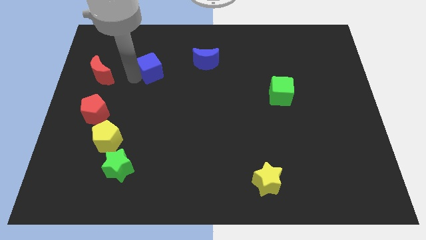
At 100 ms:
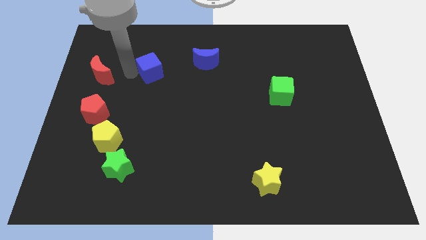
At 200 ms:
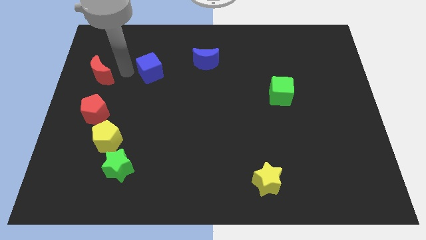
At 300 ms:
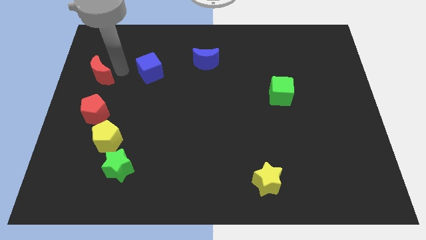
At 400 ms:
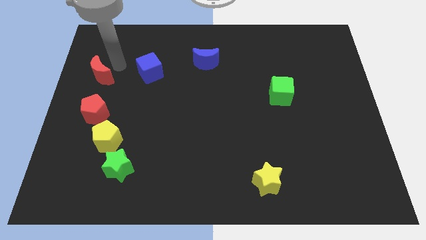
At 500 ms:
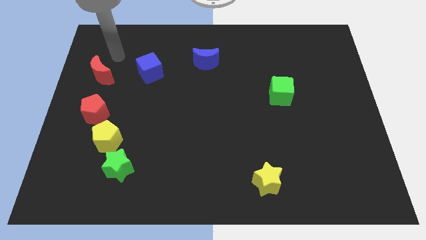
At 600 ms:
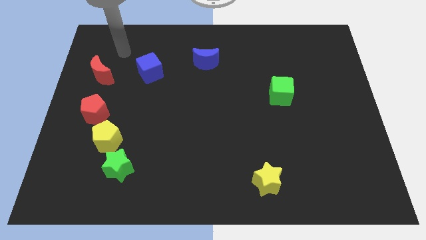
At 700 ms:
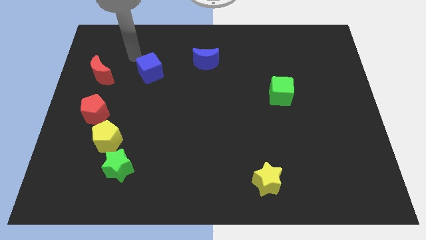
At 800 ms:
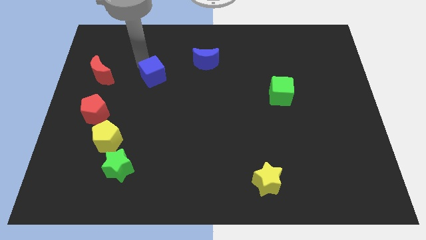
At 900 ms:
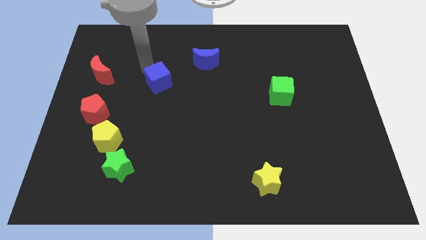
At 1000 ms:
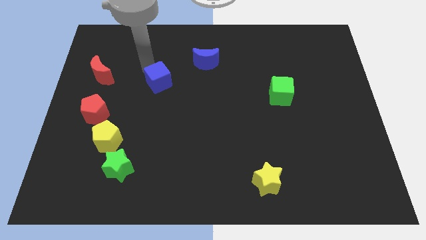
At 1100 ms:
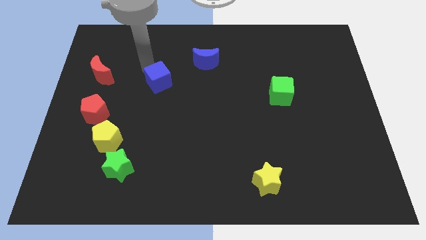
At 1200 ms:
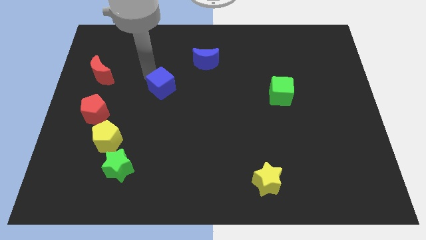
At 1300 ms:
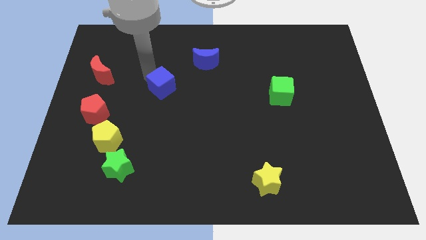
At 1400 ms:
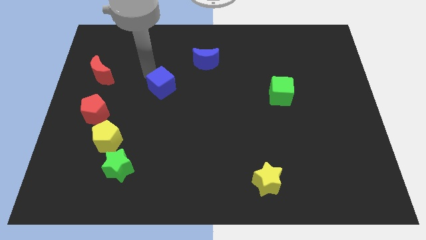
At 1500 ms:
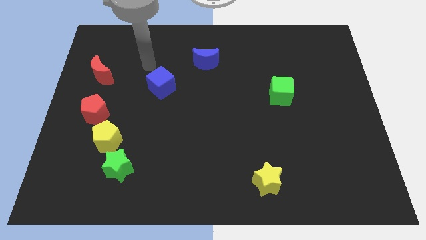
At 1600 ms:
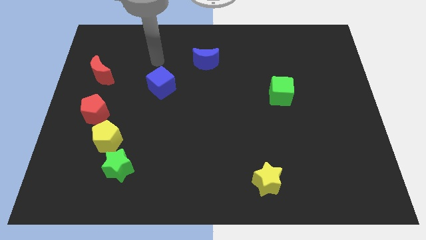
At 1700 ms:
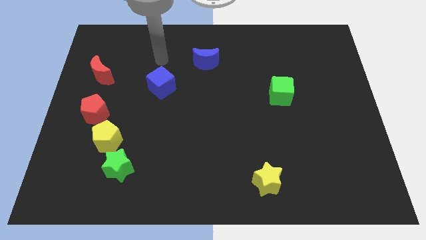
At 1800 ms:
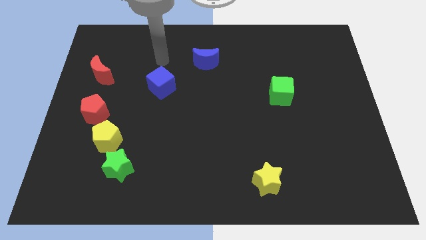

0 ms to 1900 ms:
move the cube slightly down

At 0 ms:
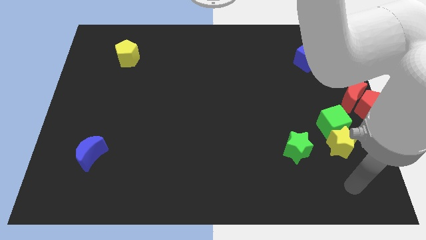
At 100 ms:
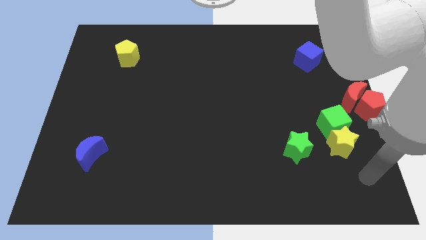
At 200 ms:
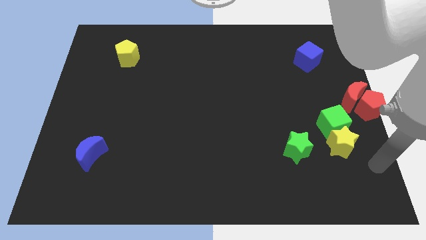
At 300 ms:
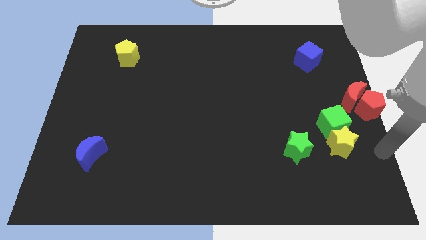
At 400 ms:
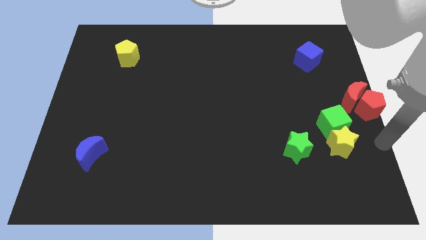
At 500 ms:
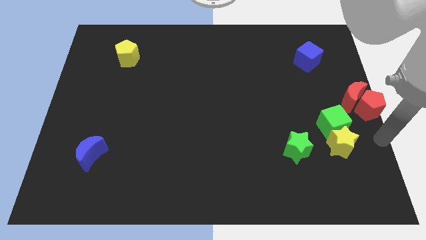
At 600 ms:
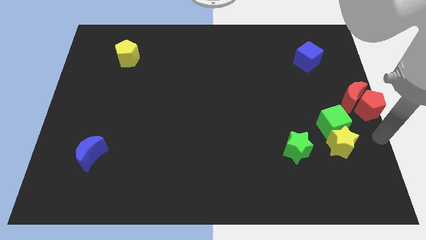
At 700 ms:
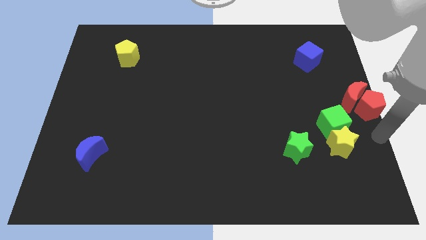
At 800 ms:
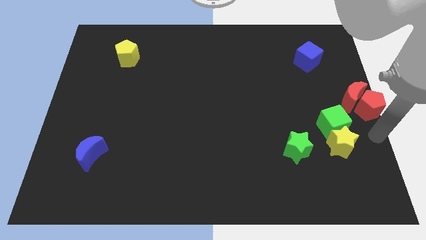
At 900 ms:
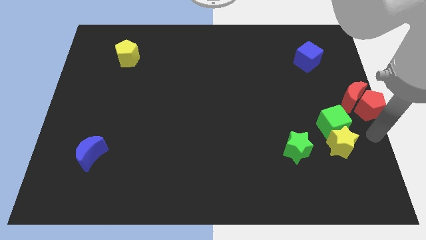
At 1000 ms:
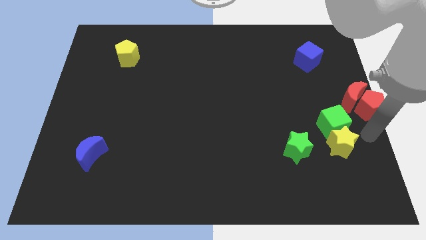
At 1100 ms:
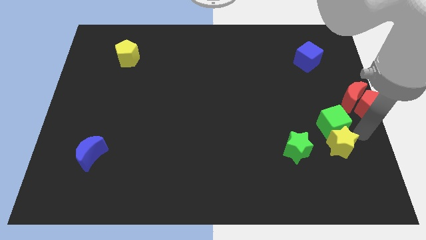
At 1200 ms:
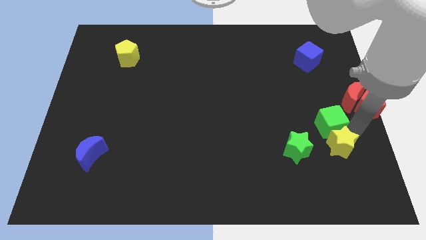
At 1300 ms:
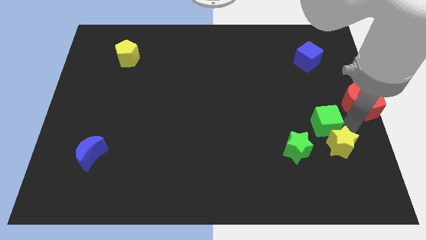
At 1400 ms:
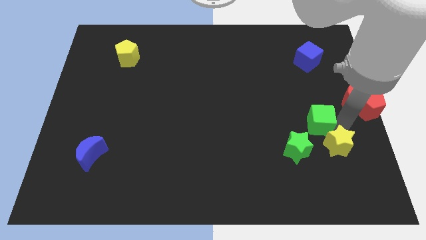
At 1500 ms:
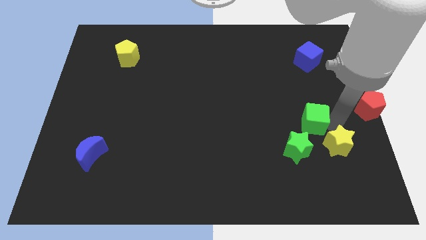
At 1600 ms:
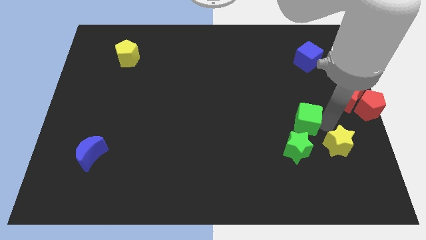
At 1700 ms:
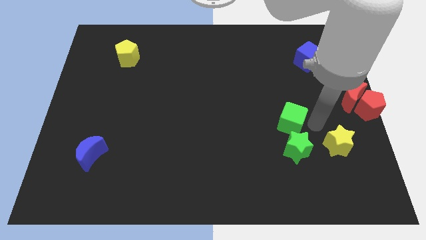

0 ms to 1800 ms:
separate the green cube from the yellow star

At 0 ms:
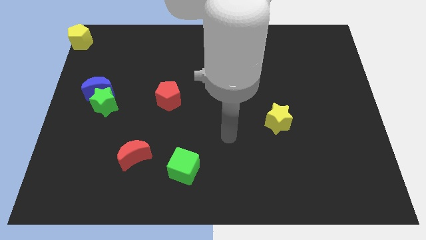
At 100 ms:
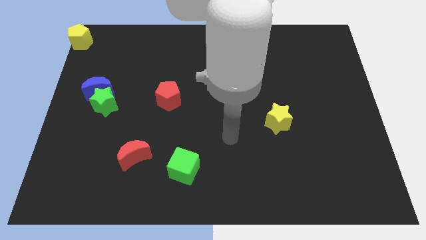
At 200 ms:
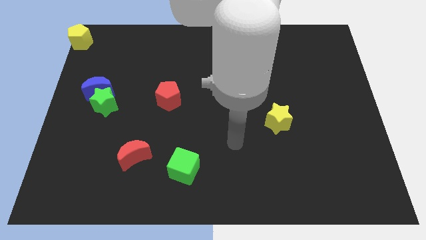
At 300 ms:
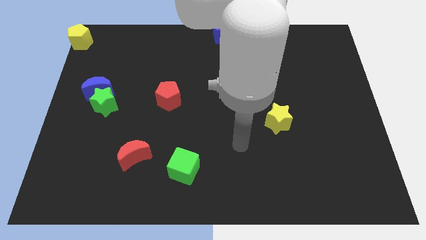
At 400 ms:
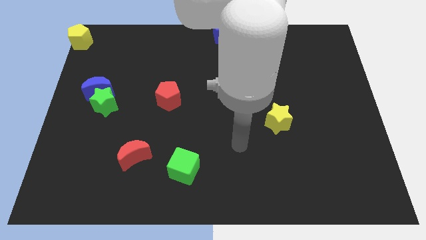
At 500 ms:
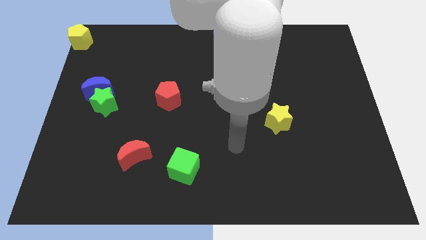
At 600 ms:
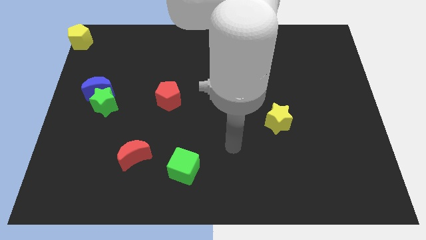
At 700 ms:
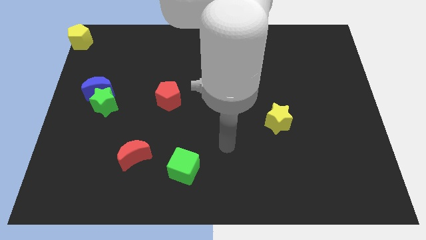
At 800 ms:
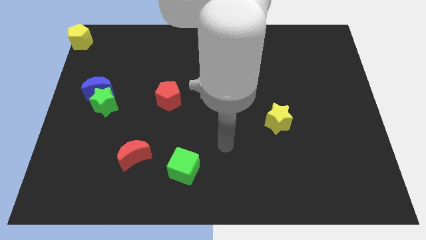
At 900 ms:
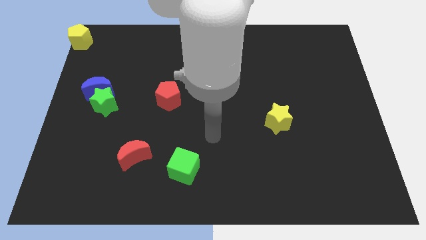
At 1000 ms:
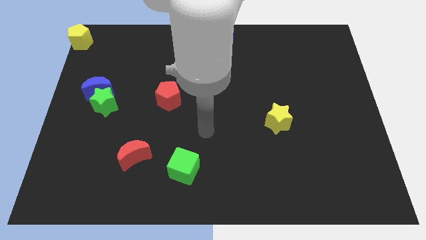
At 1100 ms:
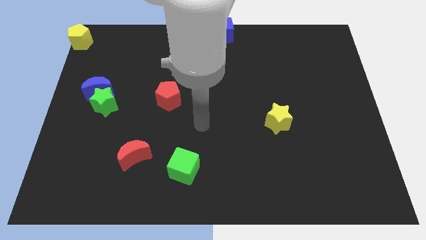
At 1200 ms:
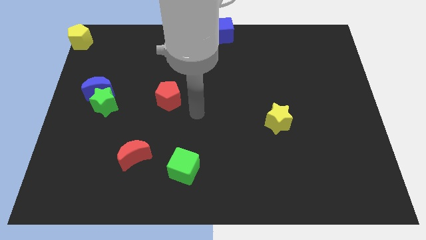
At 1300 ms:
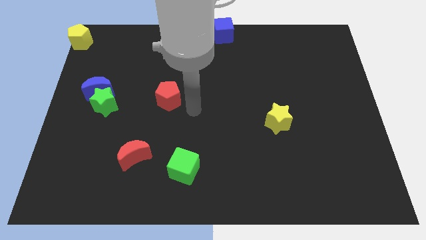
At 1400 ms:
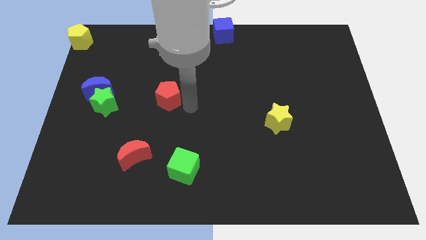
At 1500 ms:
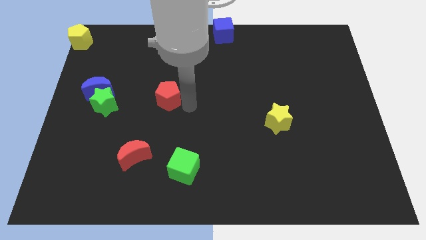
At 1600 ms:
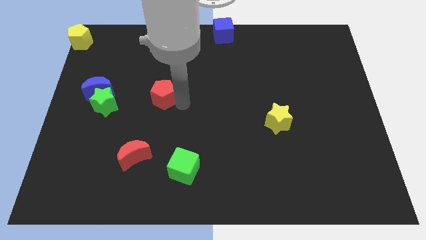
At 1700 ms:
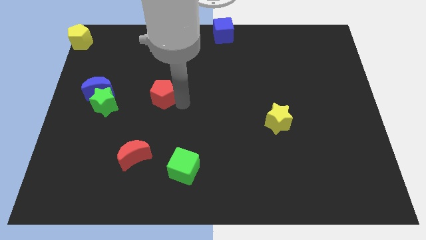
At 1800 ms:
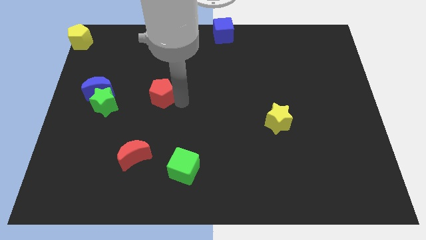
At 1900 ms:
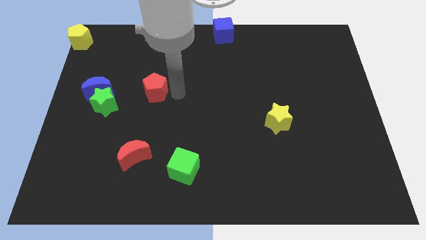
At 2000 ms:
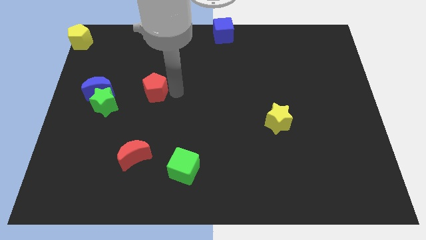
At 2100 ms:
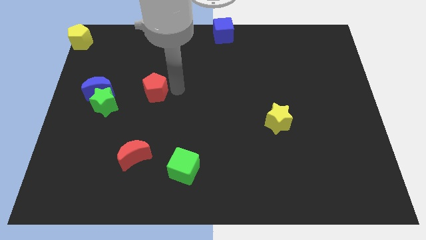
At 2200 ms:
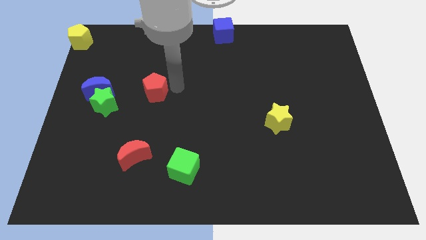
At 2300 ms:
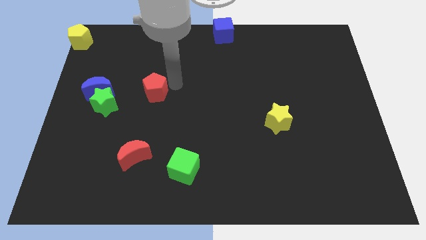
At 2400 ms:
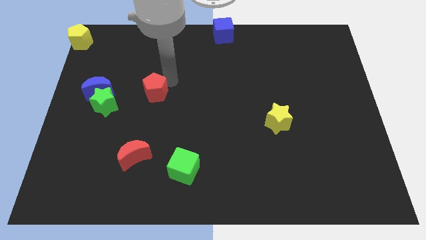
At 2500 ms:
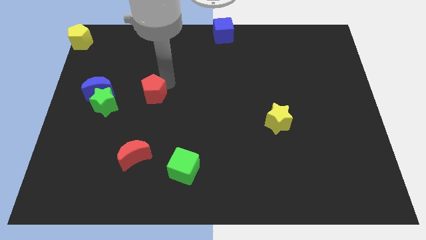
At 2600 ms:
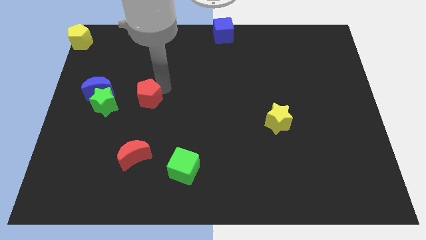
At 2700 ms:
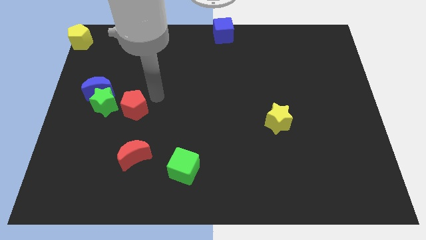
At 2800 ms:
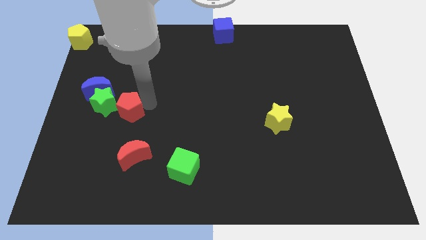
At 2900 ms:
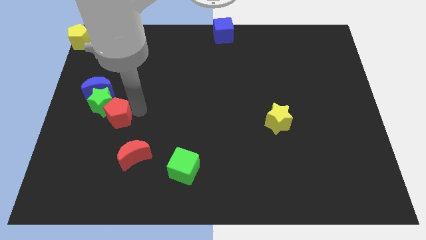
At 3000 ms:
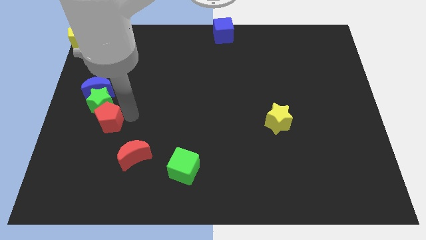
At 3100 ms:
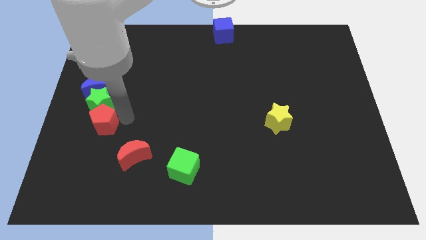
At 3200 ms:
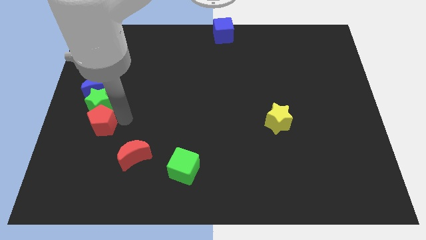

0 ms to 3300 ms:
push the red pentagon into the green star

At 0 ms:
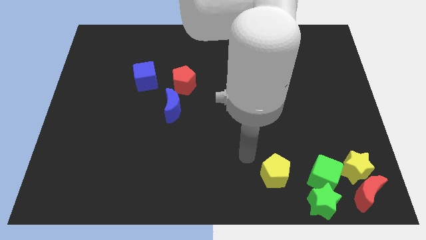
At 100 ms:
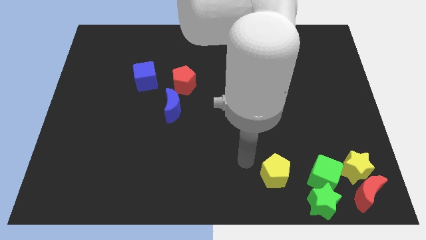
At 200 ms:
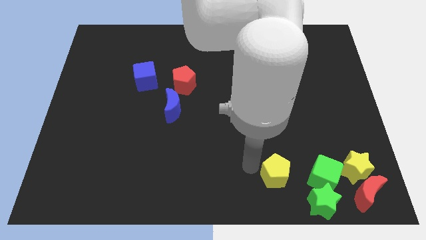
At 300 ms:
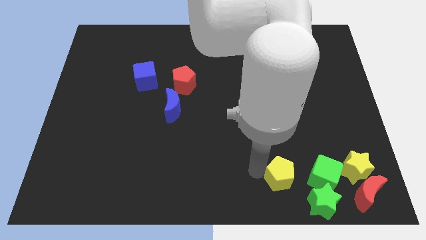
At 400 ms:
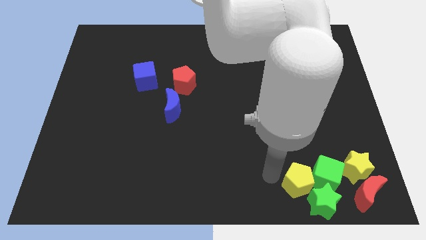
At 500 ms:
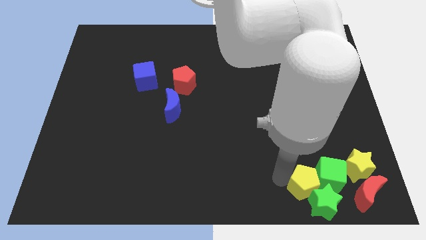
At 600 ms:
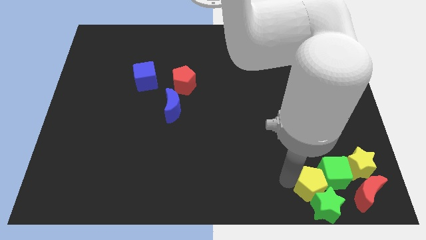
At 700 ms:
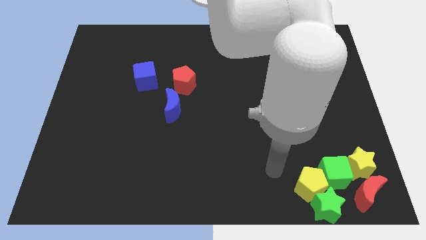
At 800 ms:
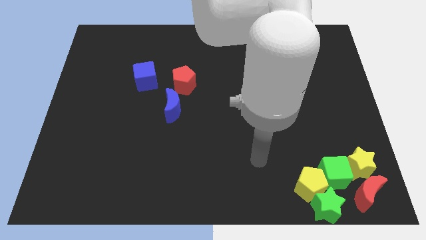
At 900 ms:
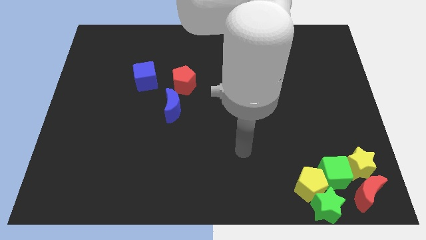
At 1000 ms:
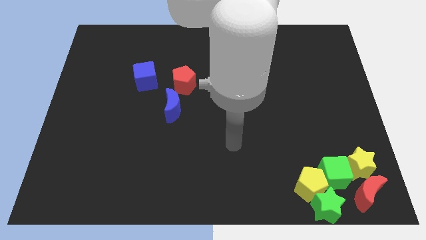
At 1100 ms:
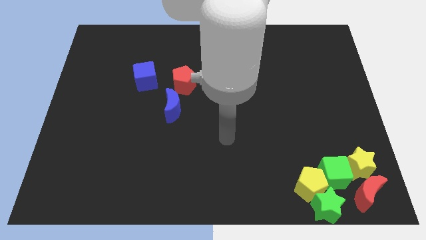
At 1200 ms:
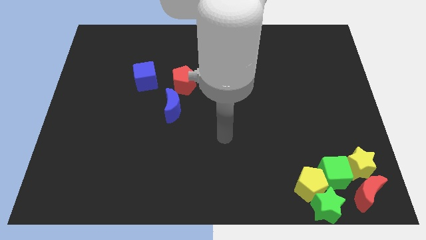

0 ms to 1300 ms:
move the yellow pentagon towards the group of blocks

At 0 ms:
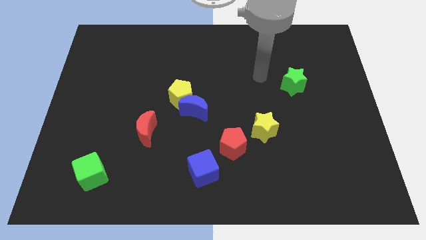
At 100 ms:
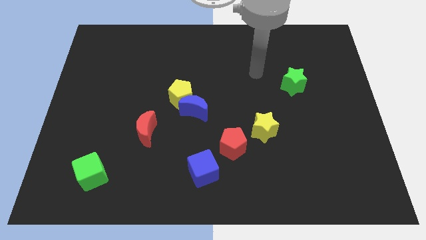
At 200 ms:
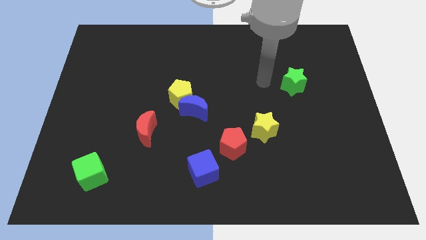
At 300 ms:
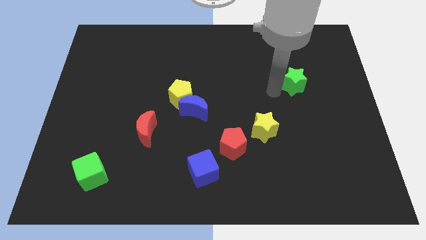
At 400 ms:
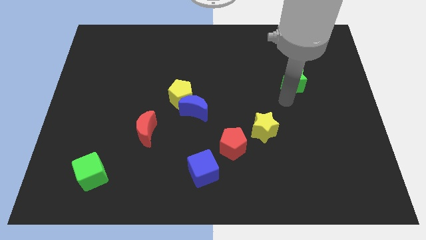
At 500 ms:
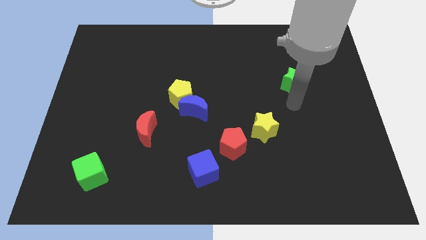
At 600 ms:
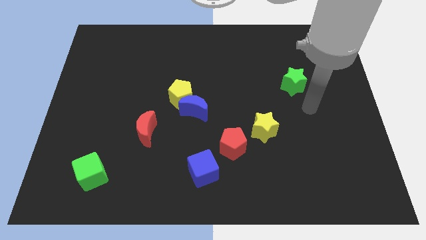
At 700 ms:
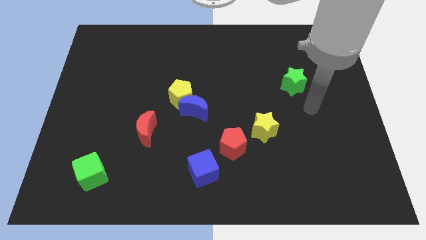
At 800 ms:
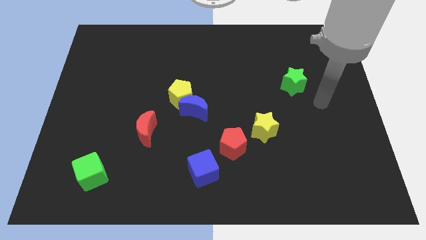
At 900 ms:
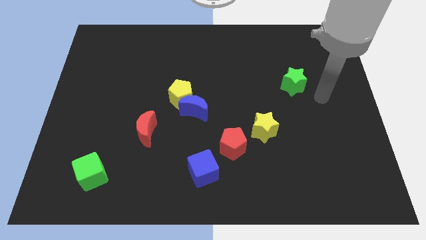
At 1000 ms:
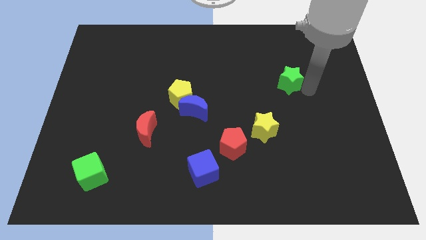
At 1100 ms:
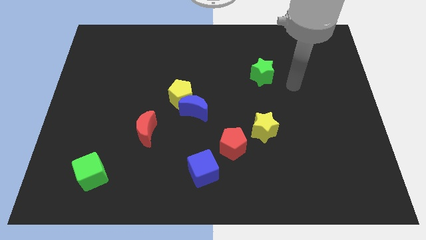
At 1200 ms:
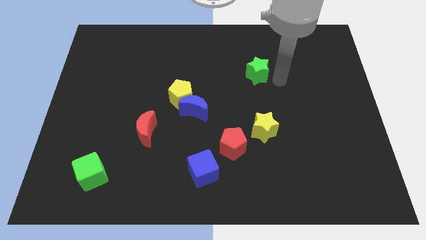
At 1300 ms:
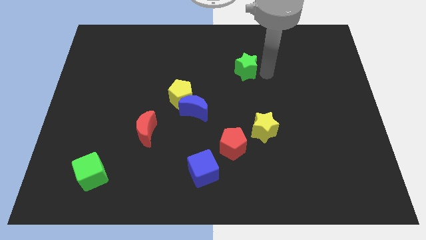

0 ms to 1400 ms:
move green star to the vertical top of yellow star
